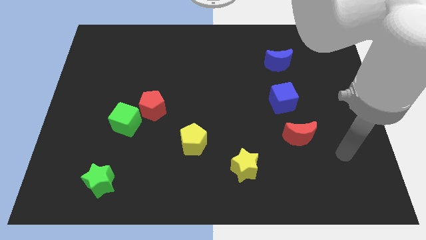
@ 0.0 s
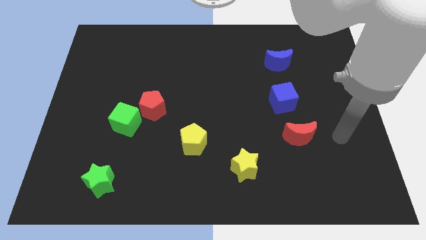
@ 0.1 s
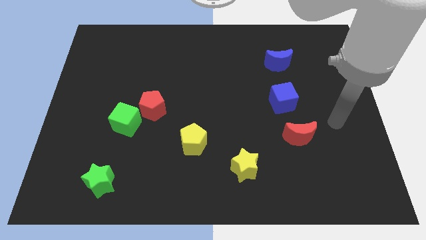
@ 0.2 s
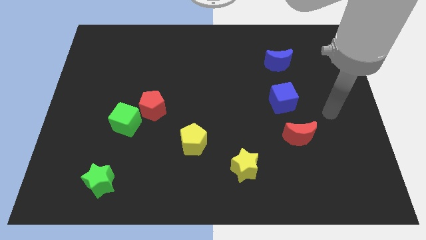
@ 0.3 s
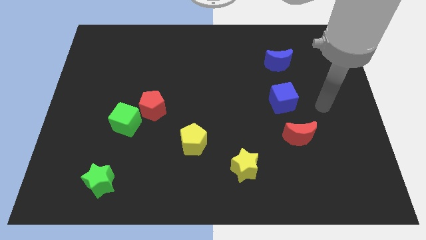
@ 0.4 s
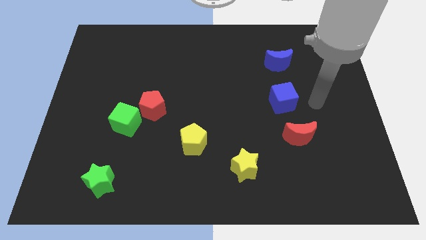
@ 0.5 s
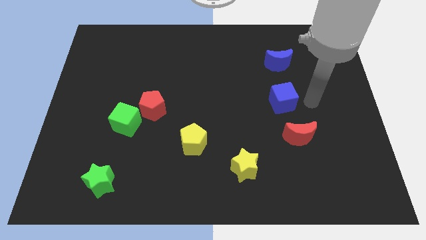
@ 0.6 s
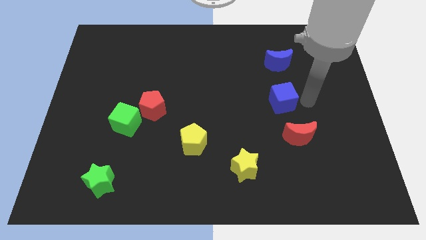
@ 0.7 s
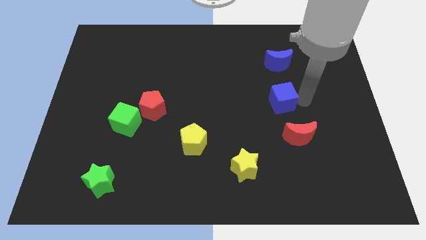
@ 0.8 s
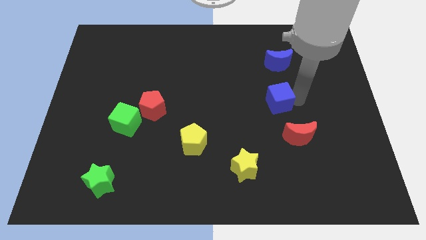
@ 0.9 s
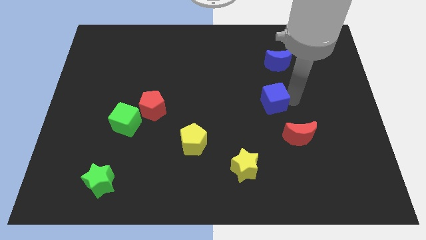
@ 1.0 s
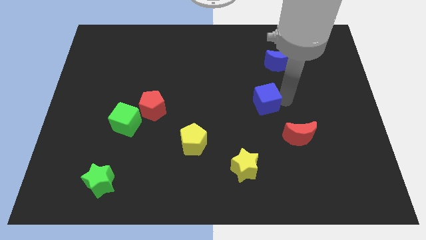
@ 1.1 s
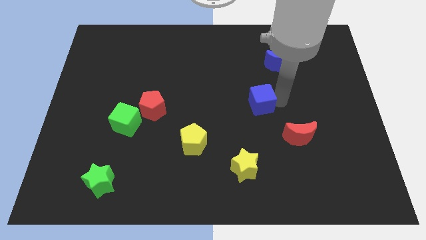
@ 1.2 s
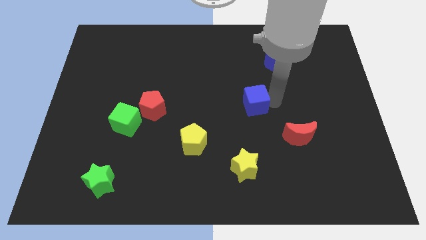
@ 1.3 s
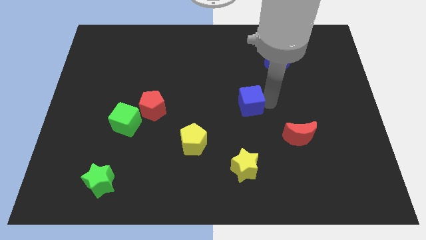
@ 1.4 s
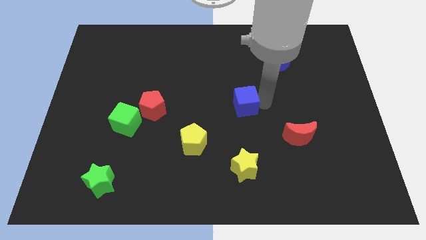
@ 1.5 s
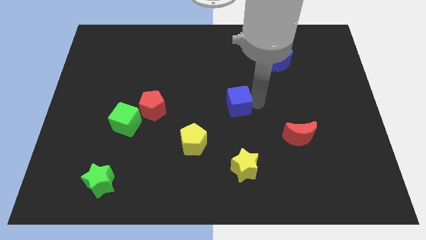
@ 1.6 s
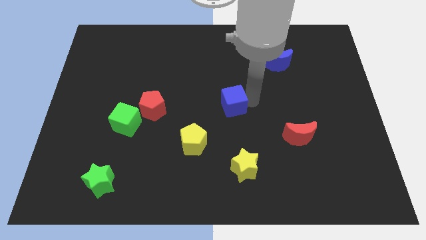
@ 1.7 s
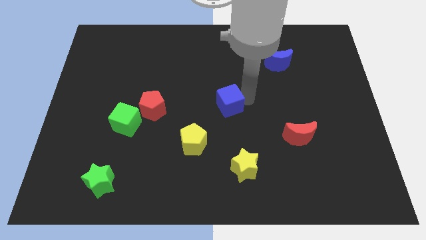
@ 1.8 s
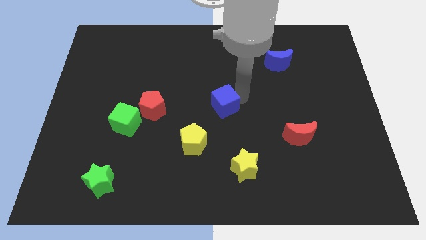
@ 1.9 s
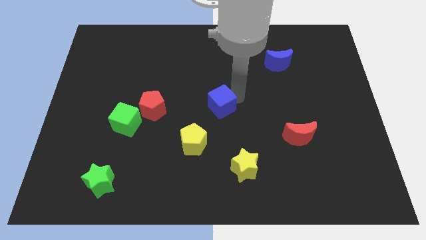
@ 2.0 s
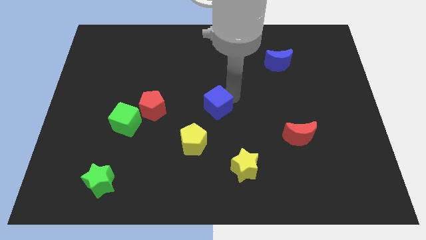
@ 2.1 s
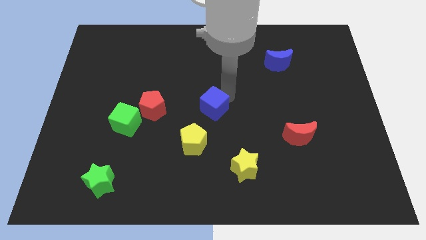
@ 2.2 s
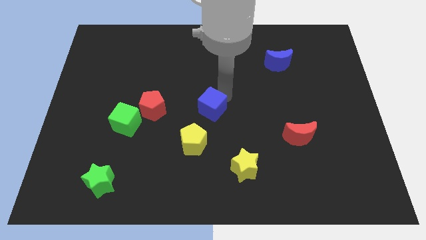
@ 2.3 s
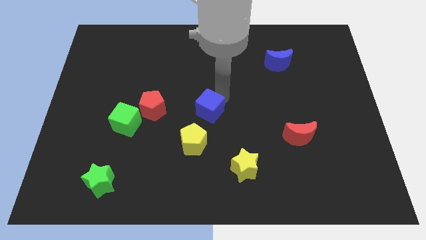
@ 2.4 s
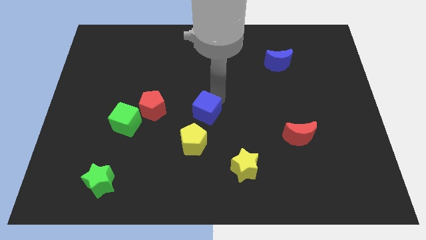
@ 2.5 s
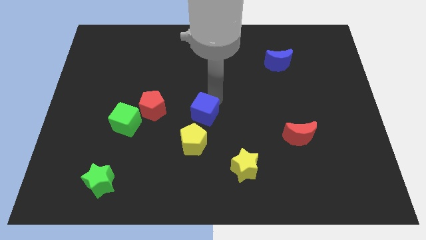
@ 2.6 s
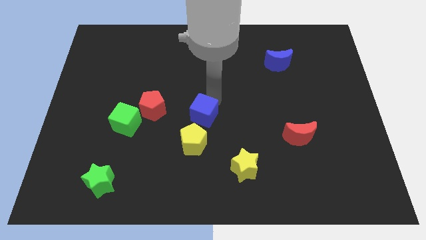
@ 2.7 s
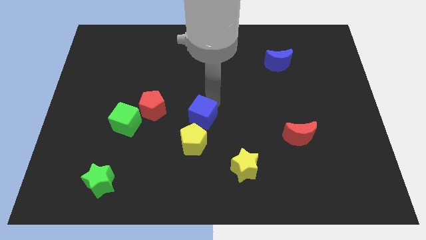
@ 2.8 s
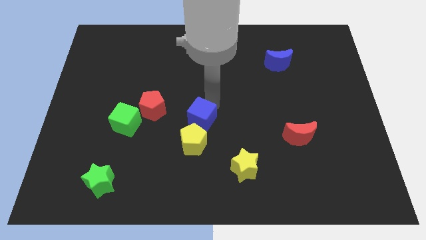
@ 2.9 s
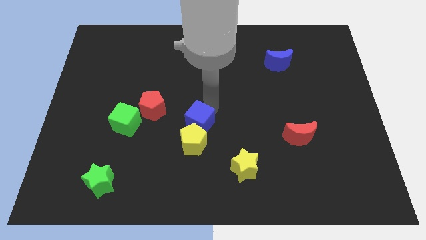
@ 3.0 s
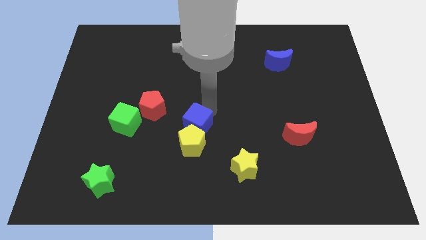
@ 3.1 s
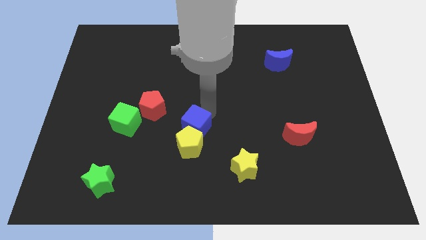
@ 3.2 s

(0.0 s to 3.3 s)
put the blue cube next to the yellow pentagon

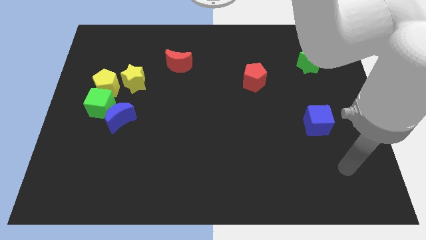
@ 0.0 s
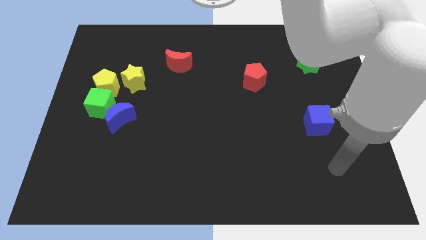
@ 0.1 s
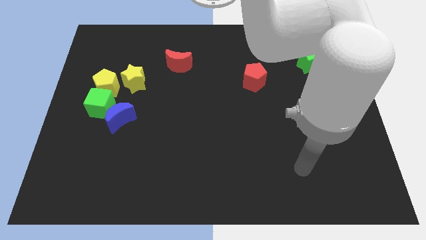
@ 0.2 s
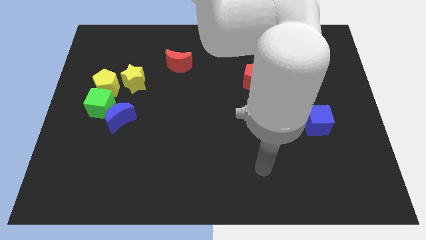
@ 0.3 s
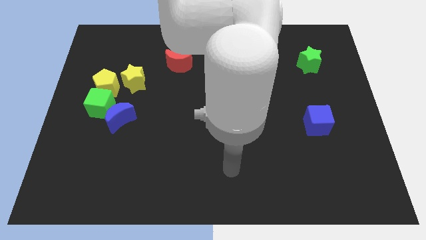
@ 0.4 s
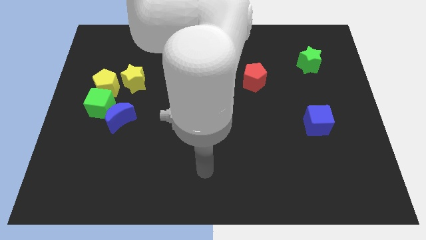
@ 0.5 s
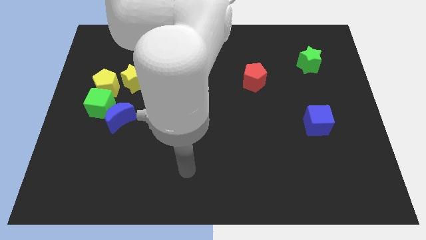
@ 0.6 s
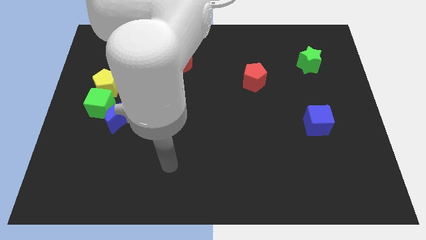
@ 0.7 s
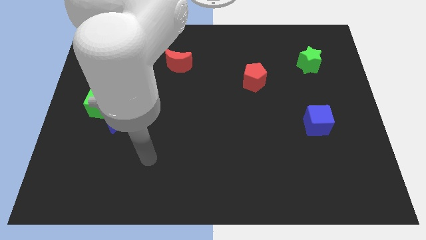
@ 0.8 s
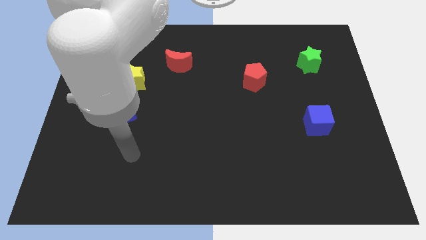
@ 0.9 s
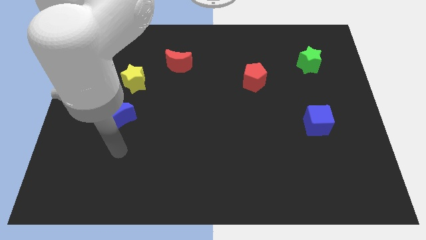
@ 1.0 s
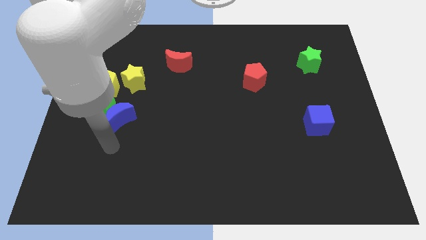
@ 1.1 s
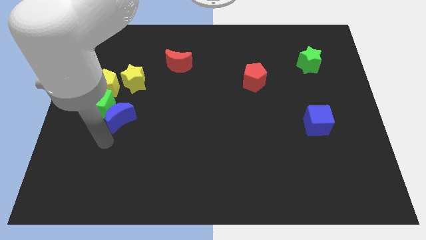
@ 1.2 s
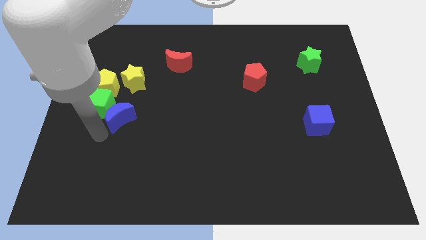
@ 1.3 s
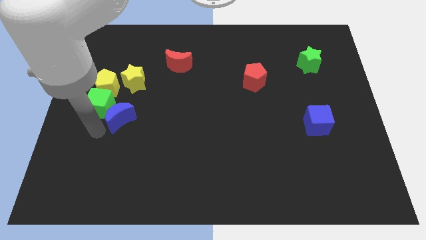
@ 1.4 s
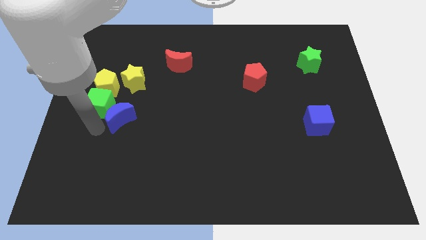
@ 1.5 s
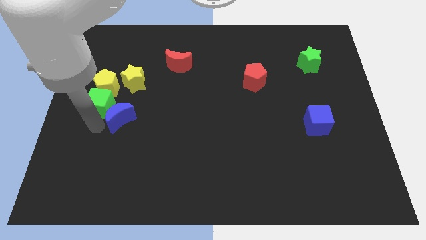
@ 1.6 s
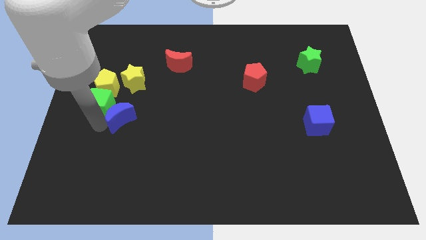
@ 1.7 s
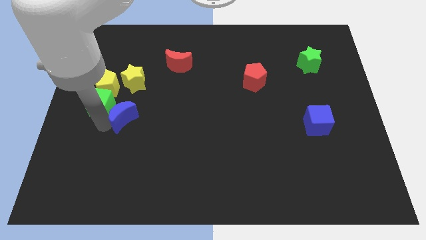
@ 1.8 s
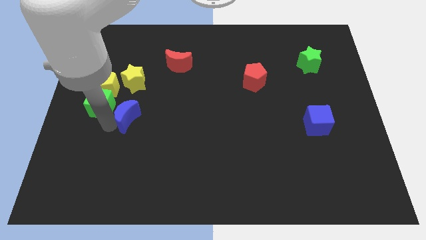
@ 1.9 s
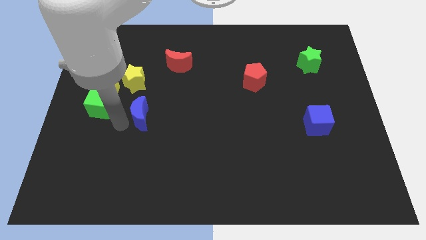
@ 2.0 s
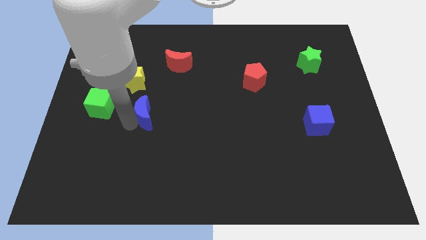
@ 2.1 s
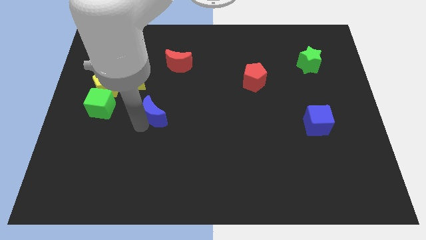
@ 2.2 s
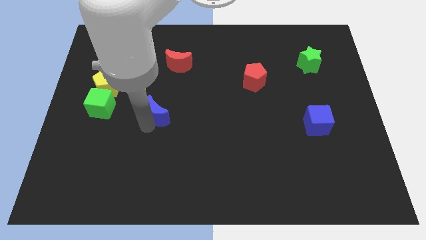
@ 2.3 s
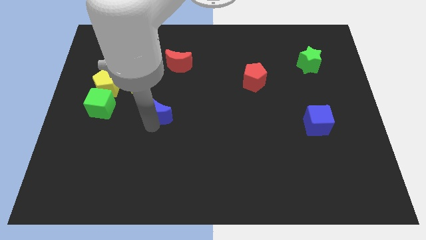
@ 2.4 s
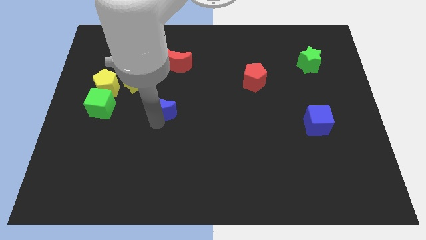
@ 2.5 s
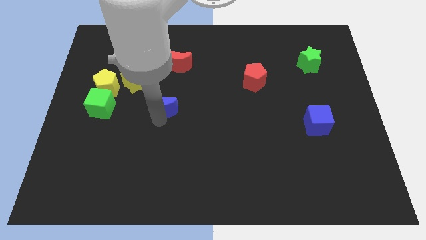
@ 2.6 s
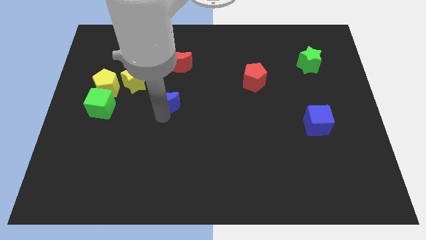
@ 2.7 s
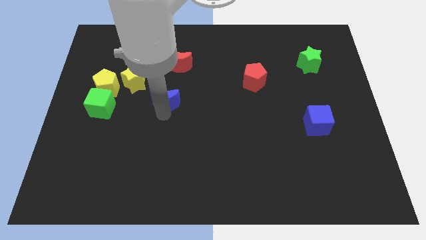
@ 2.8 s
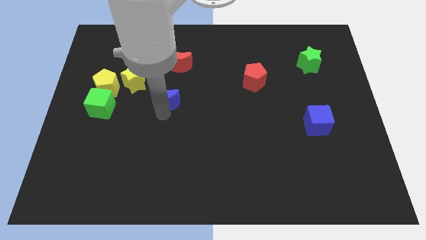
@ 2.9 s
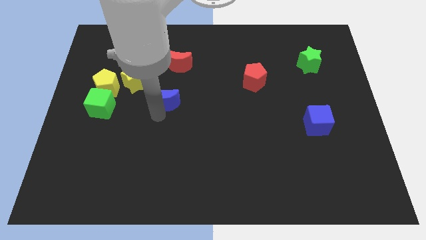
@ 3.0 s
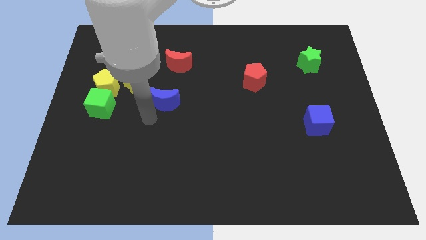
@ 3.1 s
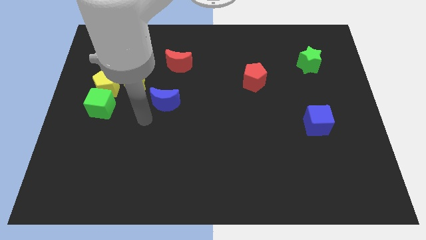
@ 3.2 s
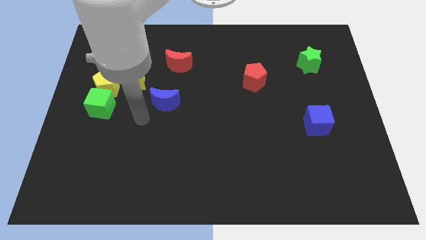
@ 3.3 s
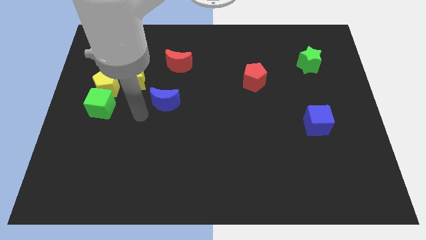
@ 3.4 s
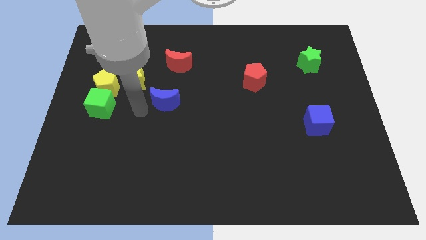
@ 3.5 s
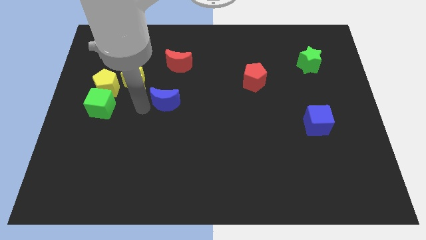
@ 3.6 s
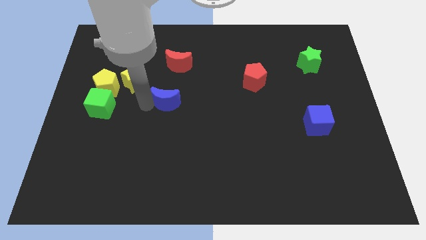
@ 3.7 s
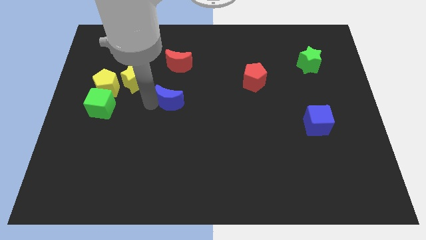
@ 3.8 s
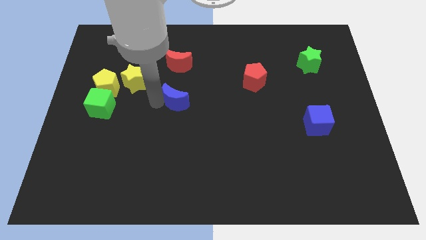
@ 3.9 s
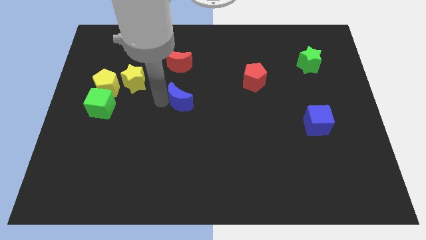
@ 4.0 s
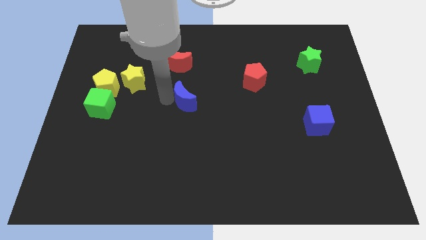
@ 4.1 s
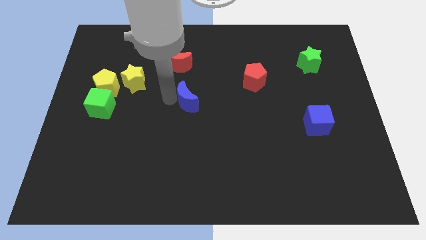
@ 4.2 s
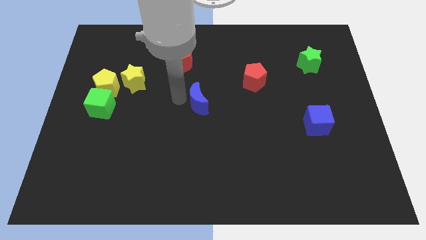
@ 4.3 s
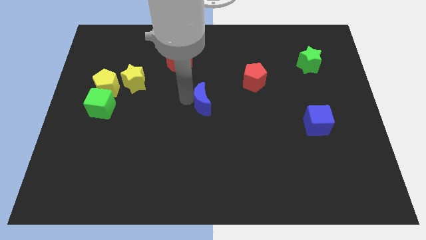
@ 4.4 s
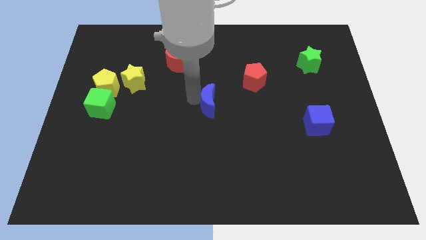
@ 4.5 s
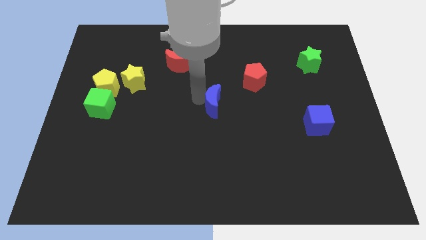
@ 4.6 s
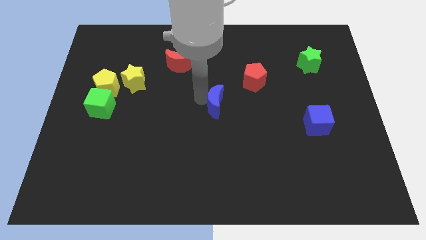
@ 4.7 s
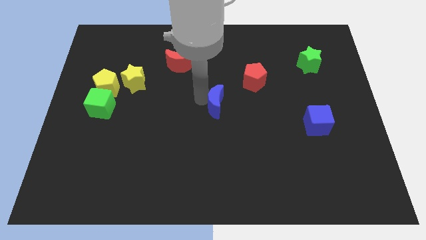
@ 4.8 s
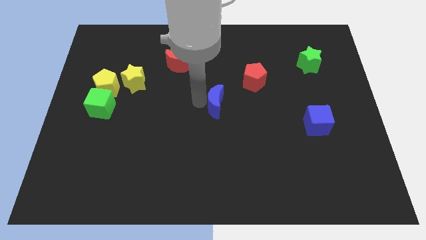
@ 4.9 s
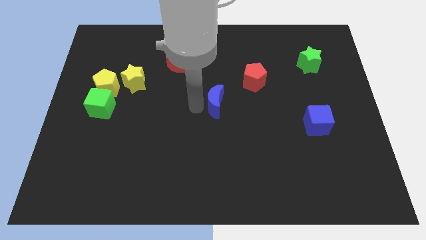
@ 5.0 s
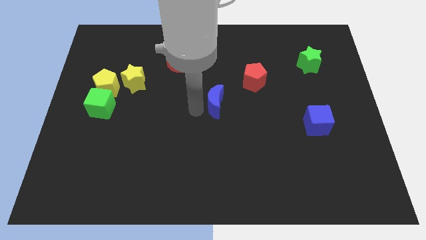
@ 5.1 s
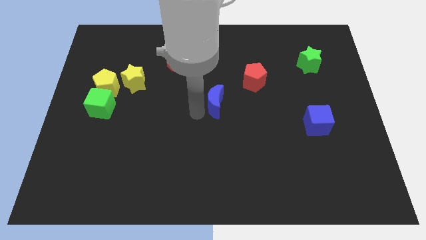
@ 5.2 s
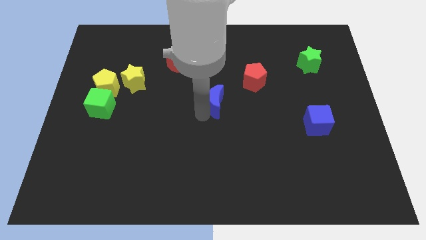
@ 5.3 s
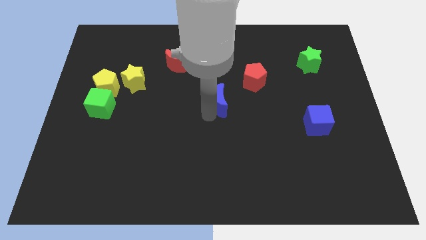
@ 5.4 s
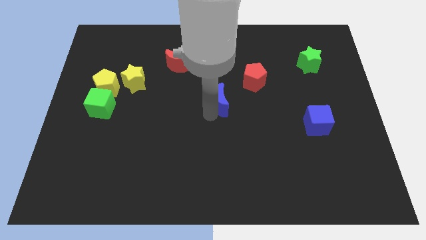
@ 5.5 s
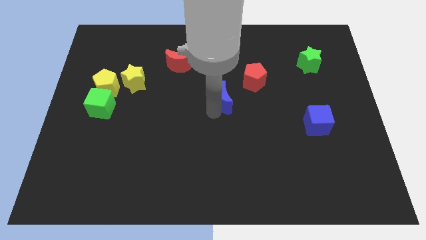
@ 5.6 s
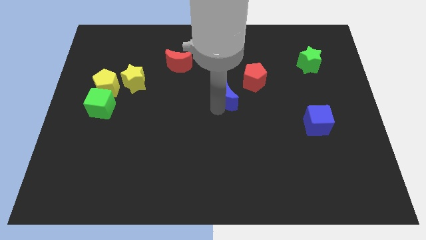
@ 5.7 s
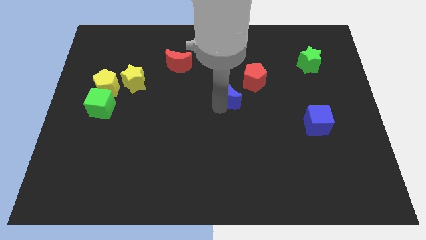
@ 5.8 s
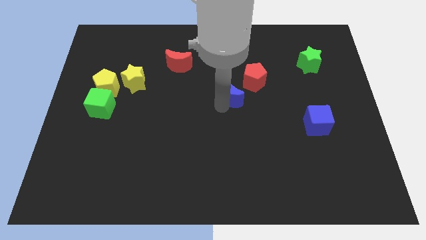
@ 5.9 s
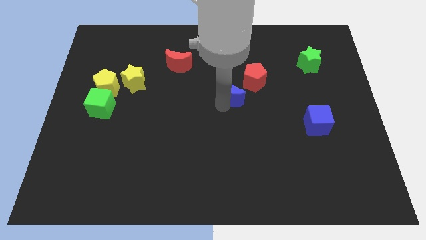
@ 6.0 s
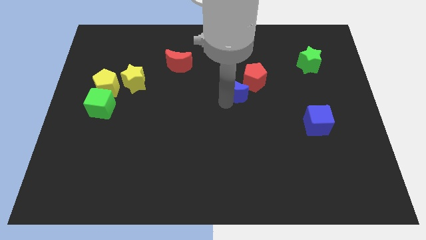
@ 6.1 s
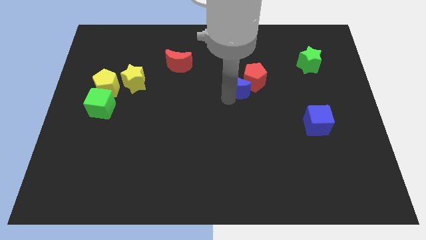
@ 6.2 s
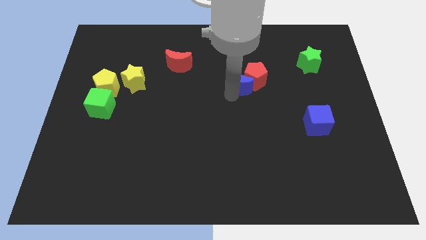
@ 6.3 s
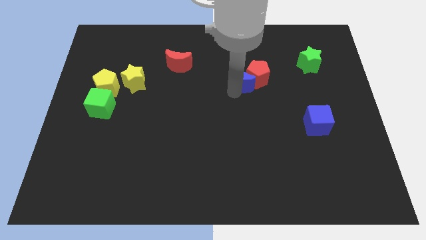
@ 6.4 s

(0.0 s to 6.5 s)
slide the blue moon close to the red pentagon
